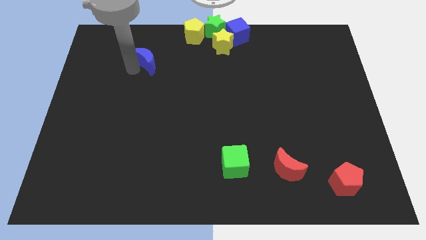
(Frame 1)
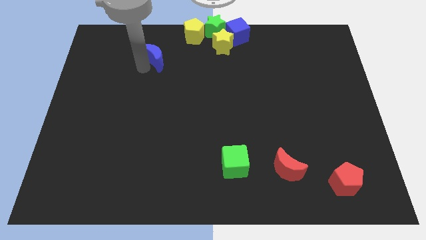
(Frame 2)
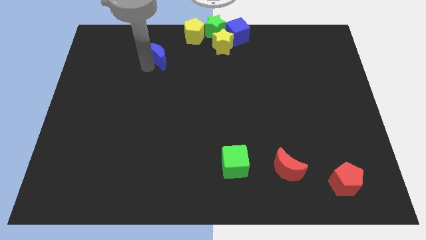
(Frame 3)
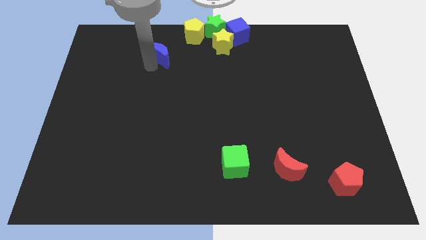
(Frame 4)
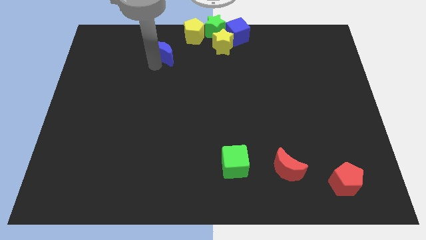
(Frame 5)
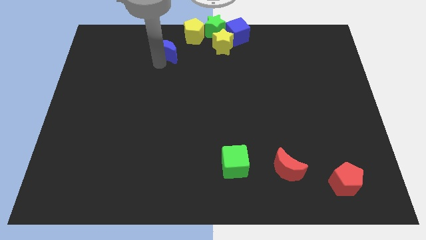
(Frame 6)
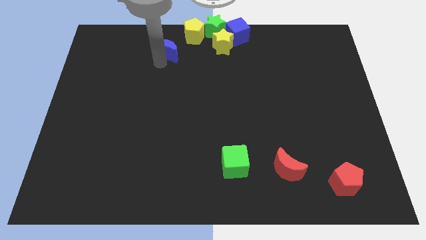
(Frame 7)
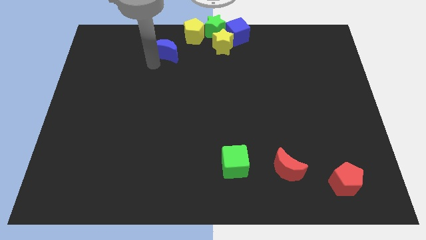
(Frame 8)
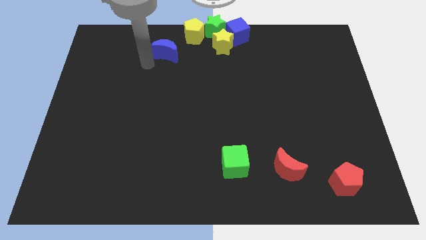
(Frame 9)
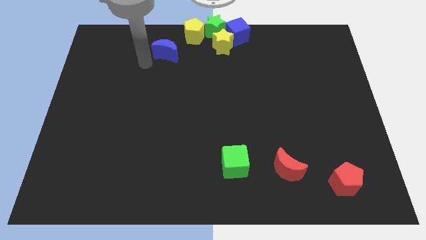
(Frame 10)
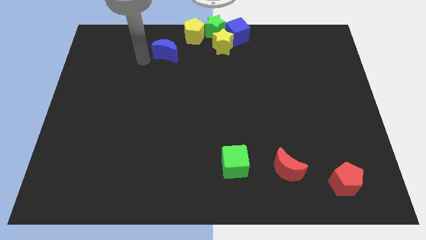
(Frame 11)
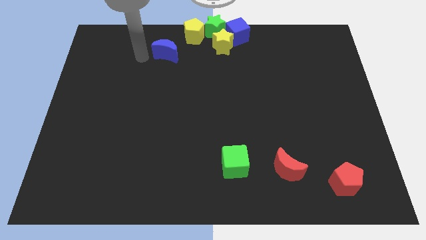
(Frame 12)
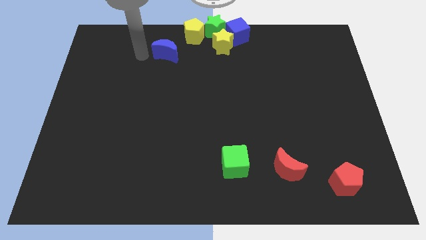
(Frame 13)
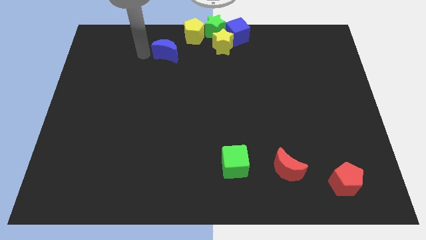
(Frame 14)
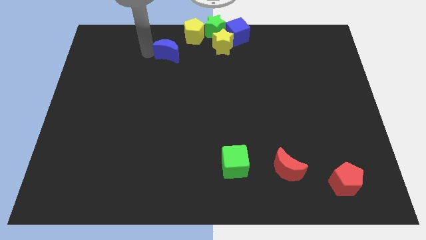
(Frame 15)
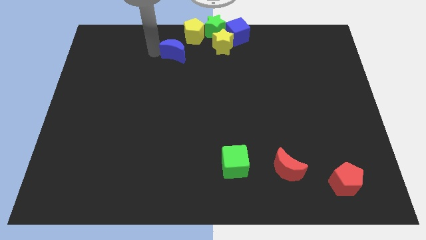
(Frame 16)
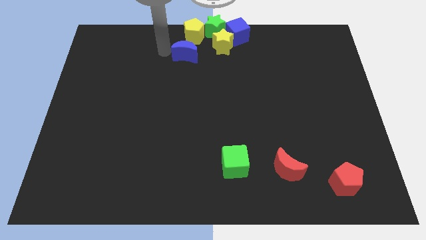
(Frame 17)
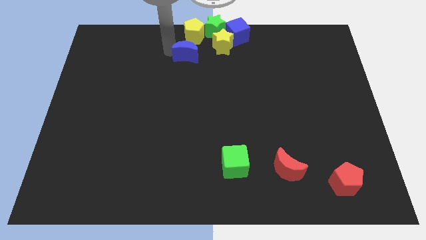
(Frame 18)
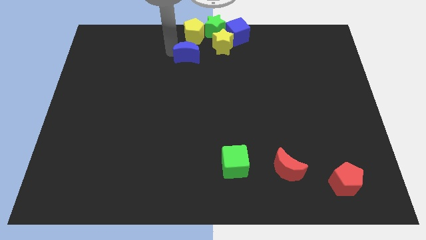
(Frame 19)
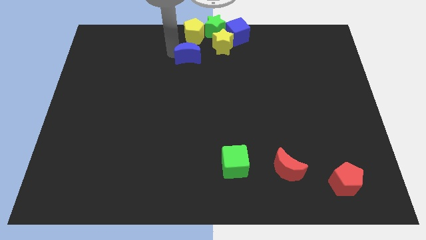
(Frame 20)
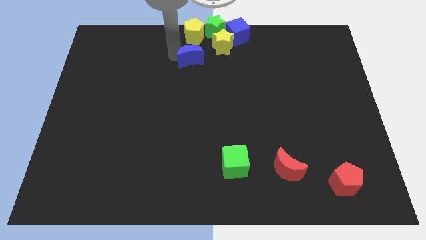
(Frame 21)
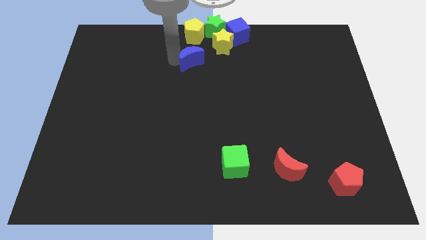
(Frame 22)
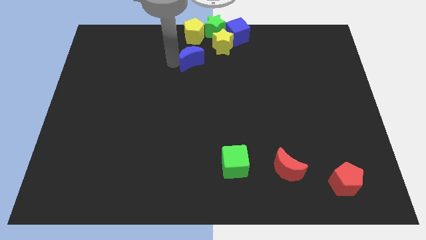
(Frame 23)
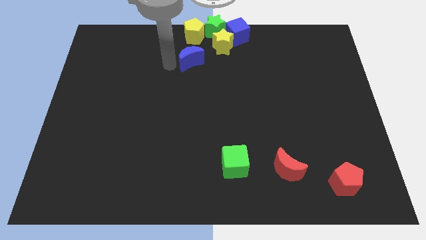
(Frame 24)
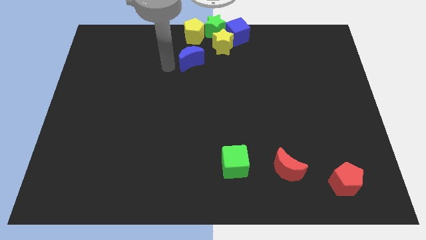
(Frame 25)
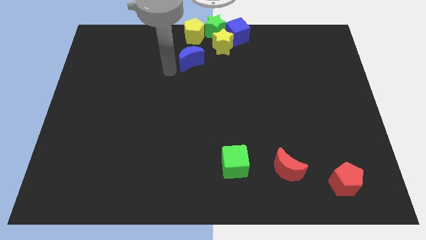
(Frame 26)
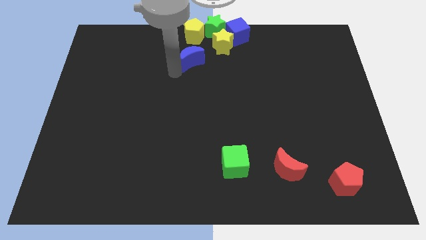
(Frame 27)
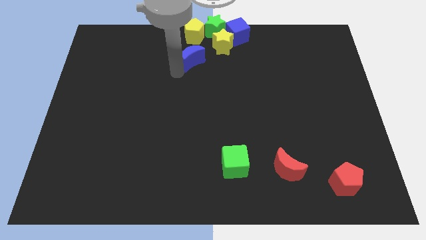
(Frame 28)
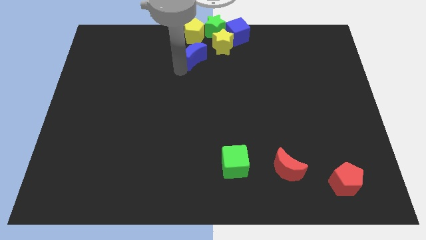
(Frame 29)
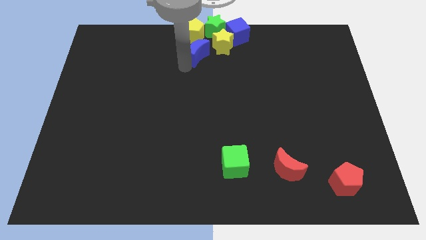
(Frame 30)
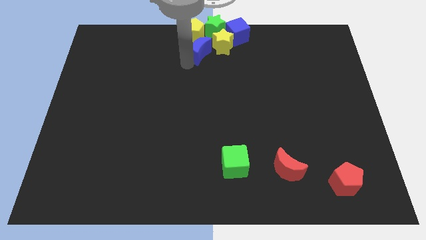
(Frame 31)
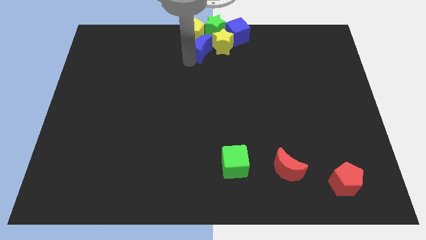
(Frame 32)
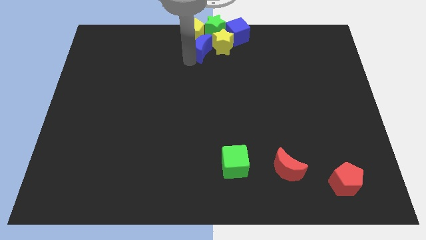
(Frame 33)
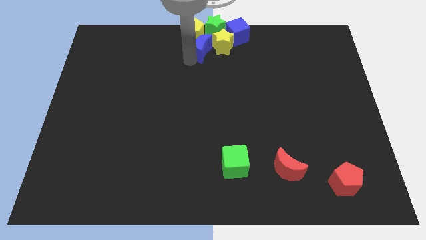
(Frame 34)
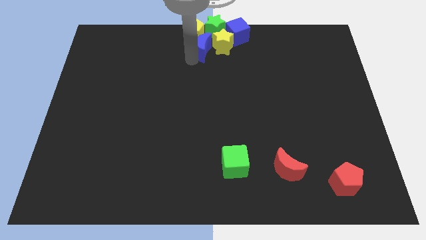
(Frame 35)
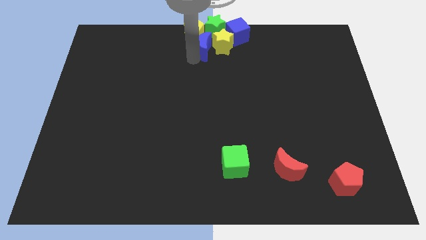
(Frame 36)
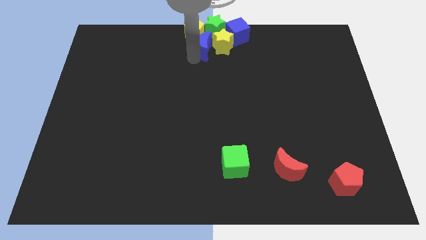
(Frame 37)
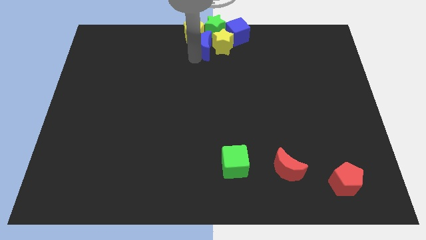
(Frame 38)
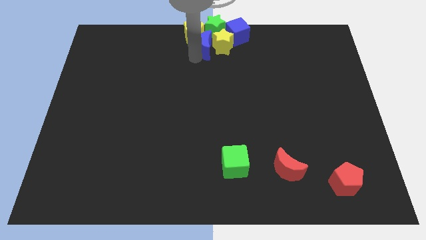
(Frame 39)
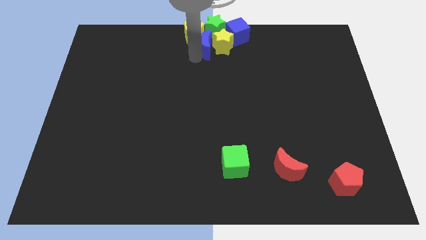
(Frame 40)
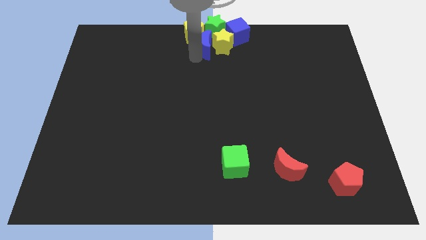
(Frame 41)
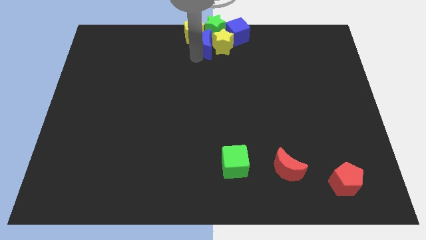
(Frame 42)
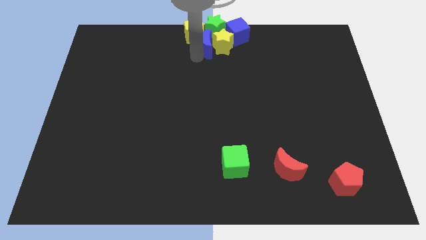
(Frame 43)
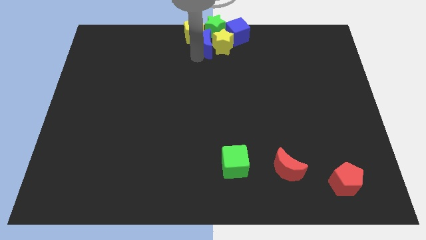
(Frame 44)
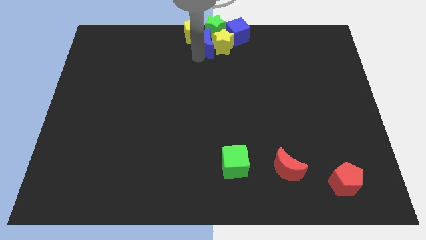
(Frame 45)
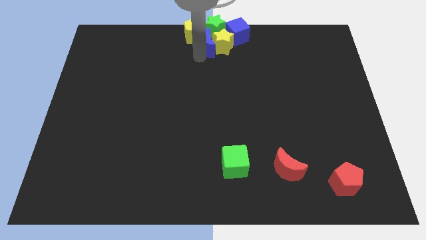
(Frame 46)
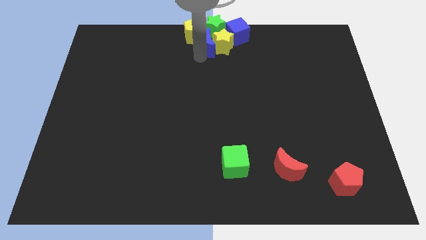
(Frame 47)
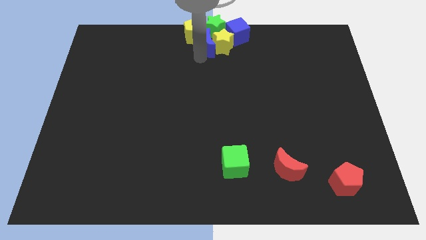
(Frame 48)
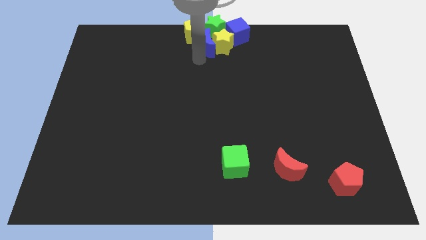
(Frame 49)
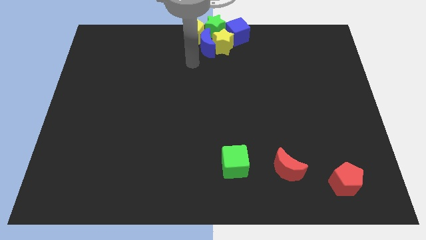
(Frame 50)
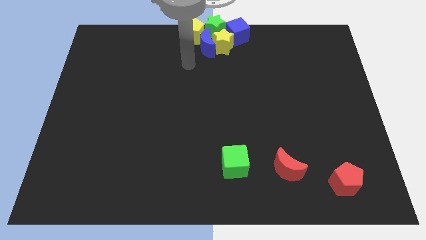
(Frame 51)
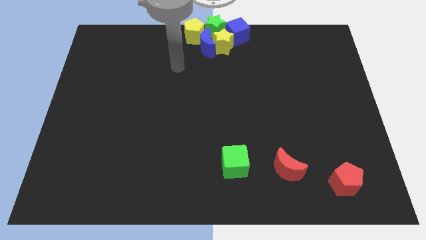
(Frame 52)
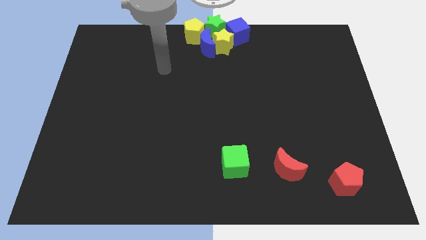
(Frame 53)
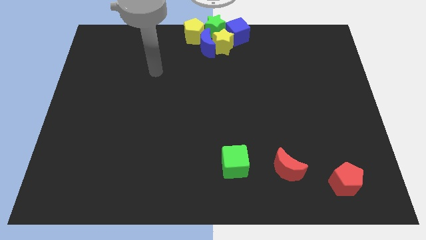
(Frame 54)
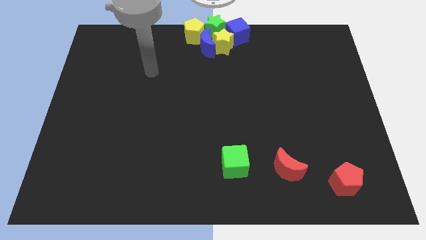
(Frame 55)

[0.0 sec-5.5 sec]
move the blue crescent left to the yellow star

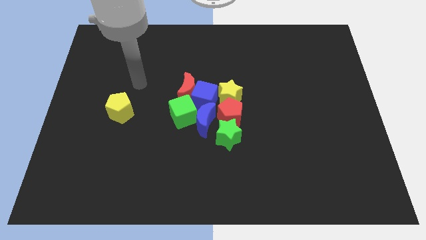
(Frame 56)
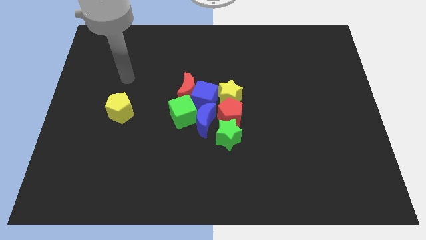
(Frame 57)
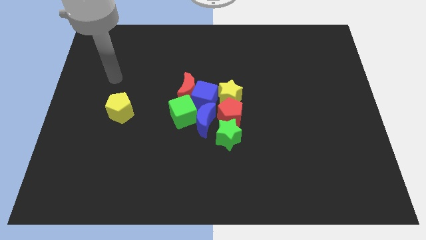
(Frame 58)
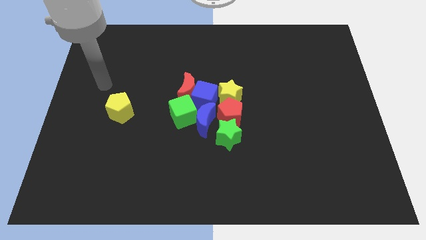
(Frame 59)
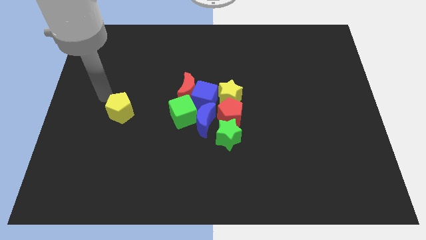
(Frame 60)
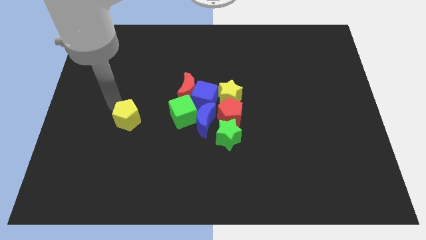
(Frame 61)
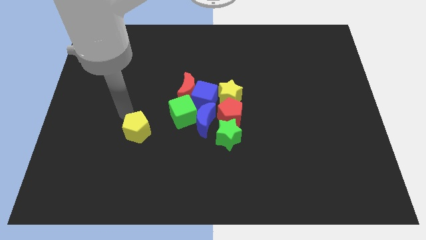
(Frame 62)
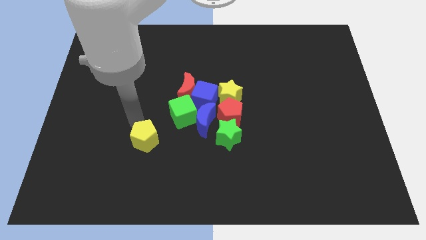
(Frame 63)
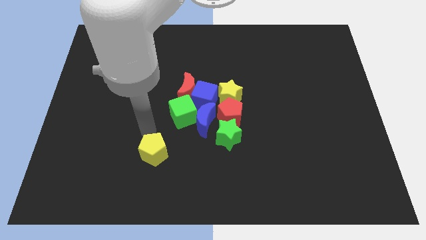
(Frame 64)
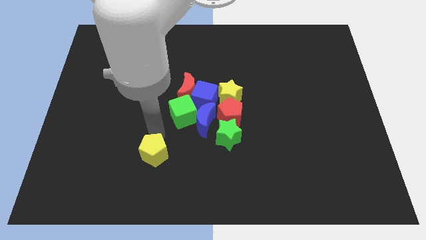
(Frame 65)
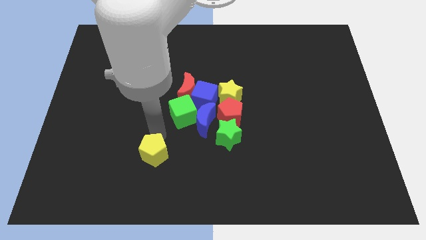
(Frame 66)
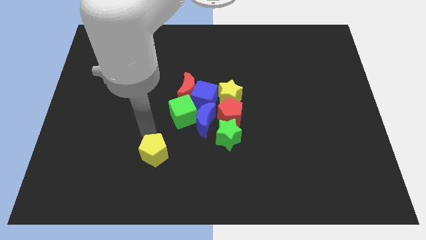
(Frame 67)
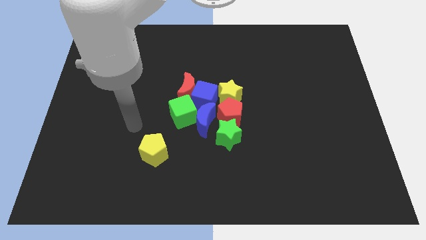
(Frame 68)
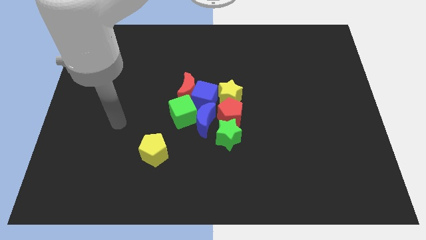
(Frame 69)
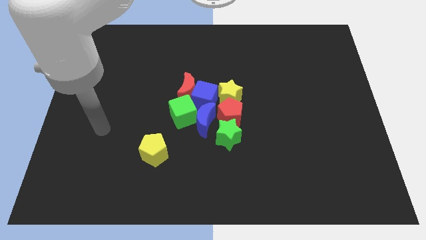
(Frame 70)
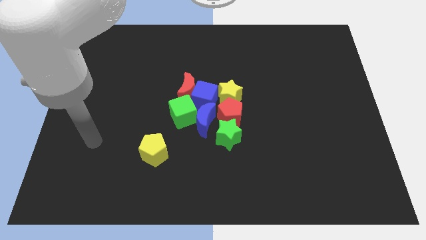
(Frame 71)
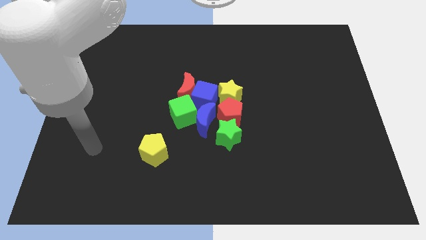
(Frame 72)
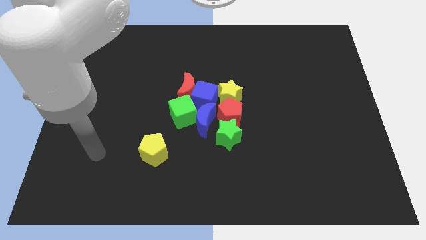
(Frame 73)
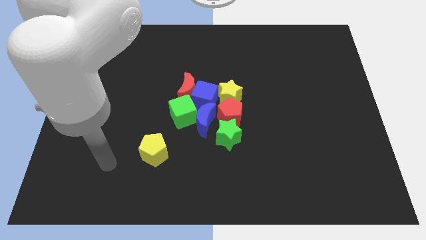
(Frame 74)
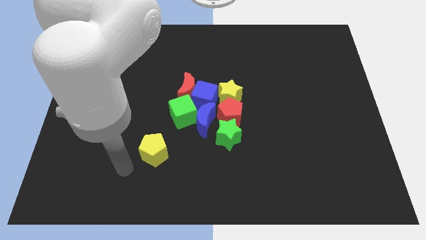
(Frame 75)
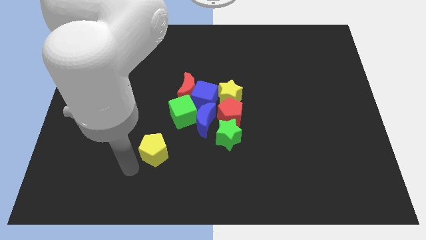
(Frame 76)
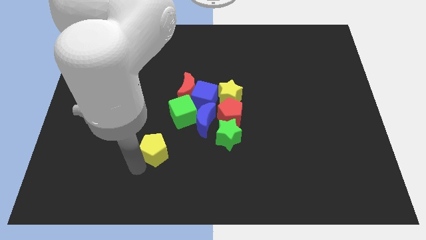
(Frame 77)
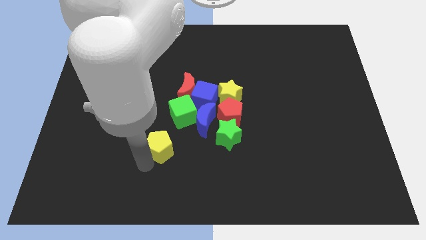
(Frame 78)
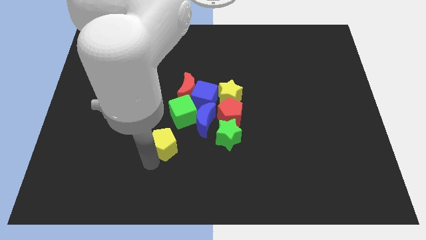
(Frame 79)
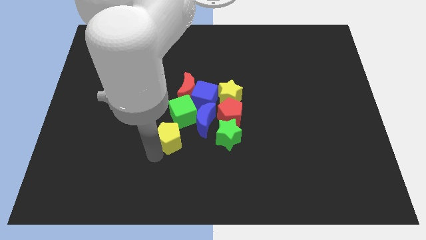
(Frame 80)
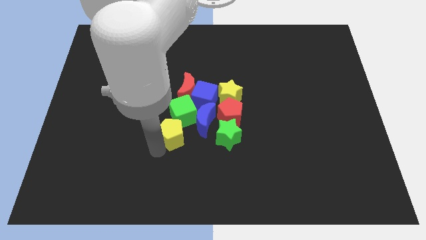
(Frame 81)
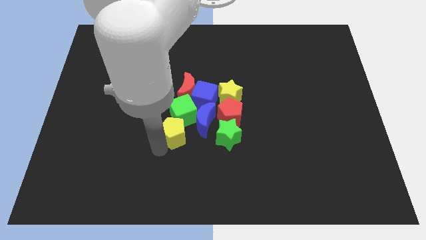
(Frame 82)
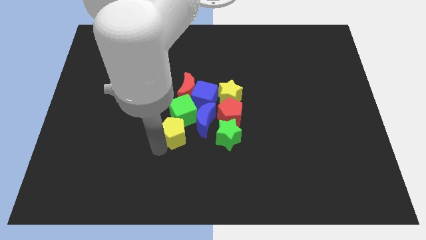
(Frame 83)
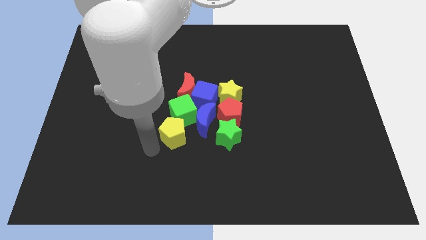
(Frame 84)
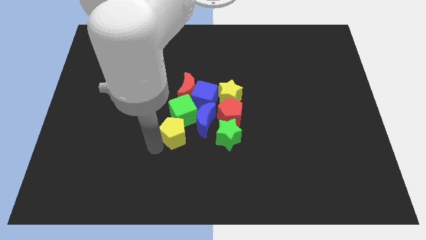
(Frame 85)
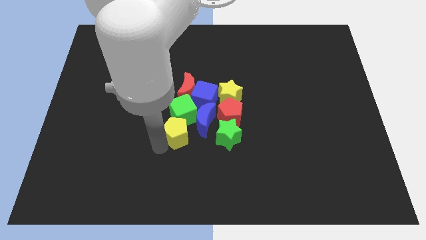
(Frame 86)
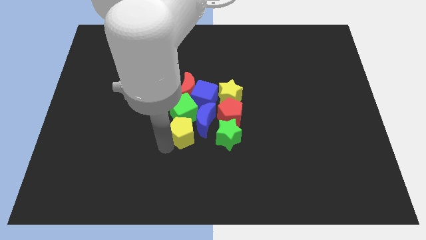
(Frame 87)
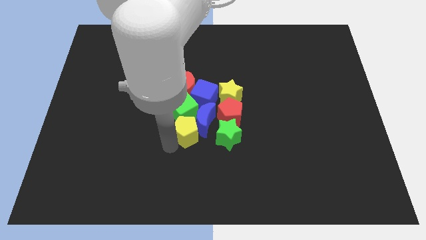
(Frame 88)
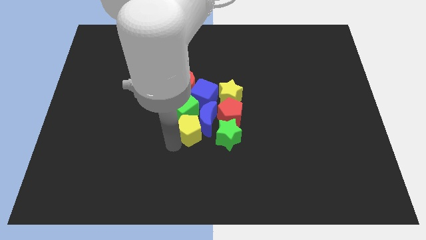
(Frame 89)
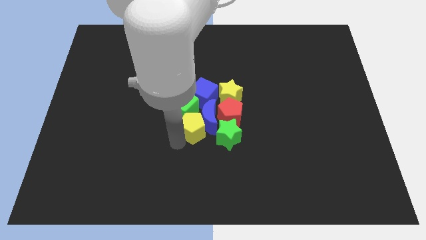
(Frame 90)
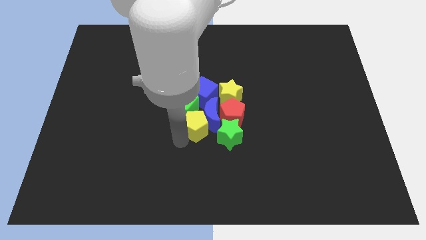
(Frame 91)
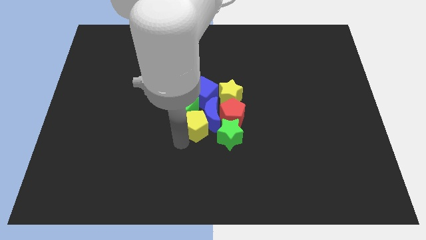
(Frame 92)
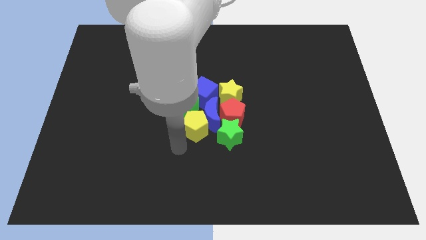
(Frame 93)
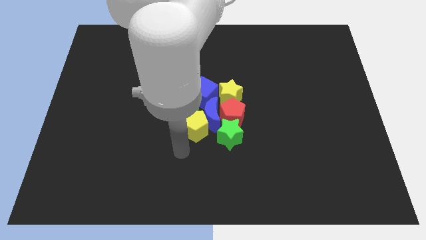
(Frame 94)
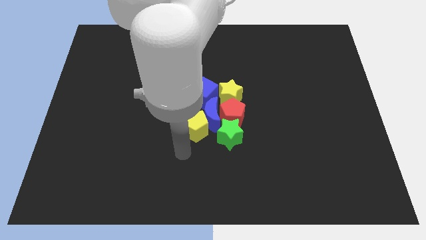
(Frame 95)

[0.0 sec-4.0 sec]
place the yellow pentagon to left side of blue crescent
